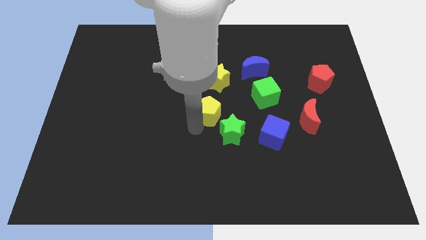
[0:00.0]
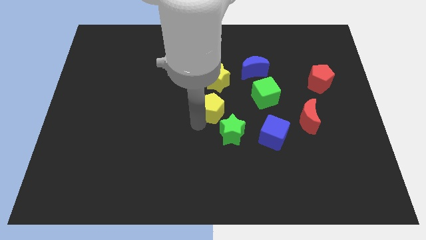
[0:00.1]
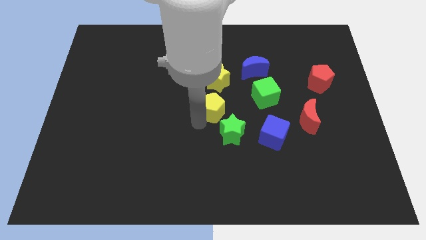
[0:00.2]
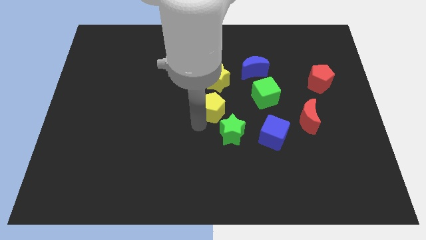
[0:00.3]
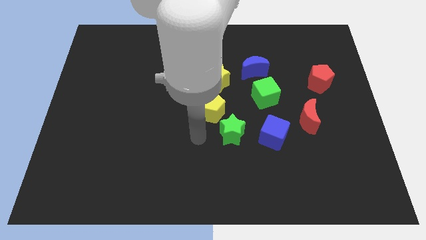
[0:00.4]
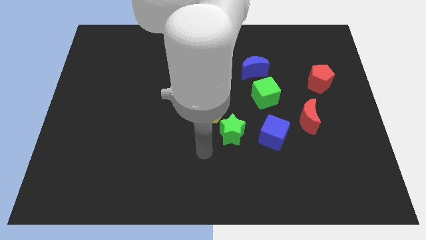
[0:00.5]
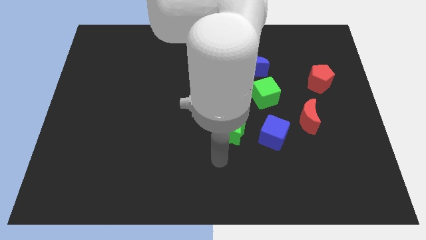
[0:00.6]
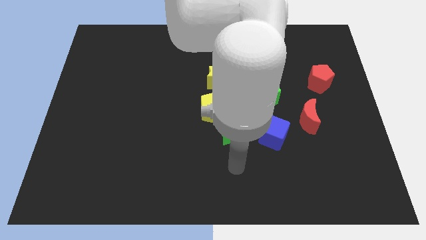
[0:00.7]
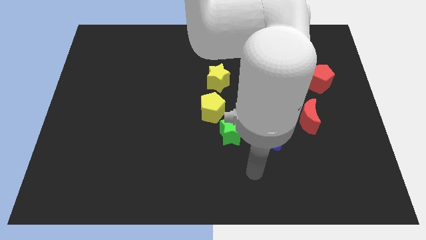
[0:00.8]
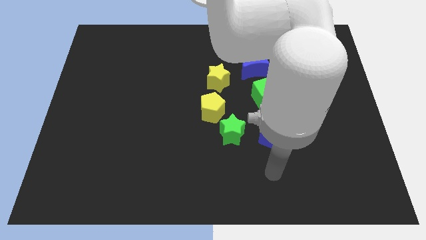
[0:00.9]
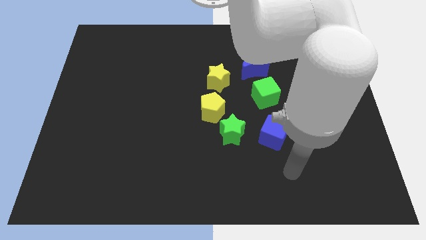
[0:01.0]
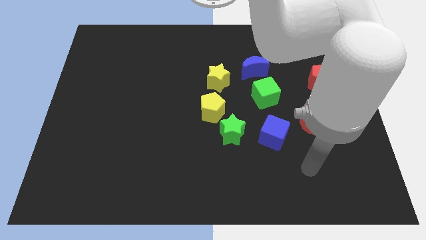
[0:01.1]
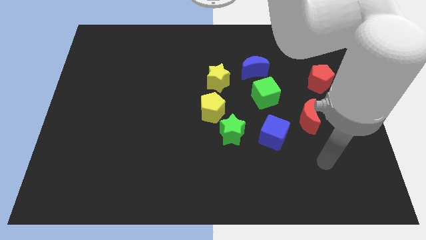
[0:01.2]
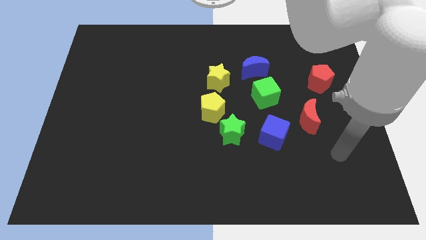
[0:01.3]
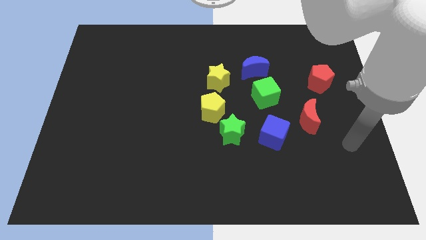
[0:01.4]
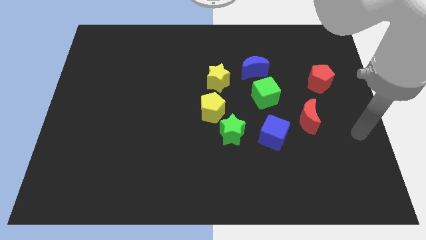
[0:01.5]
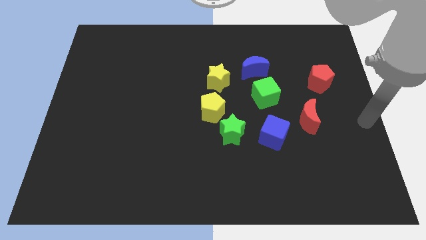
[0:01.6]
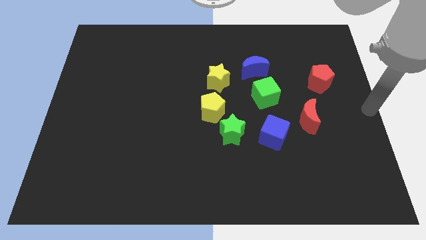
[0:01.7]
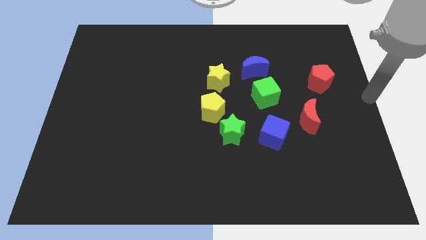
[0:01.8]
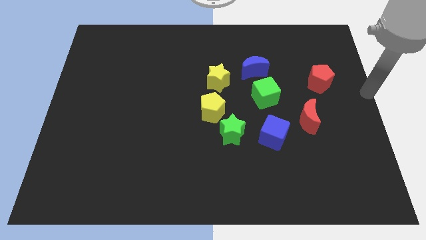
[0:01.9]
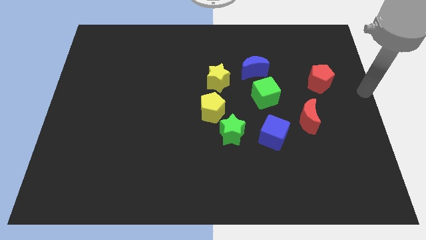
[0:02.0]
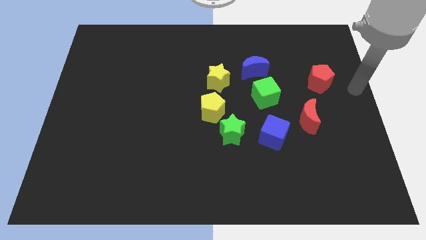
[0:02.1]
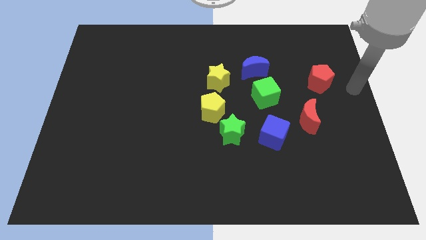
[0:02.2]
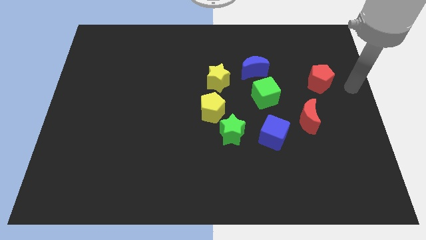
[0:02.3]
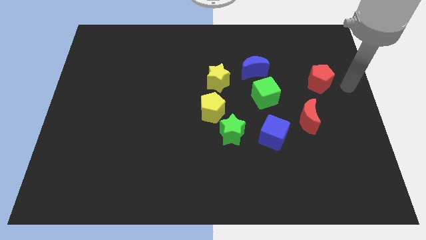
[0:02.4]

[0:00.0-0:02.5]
place your arm towards right side of red pentagon

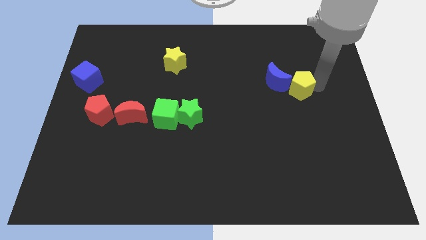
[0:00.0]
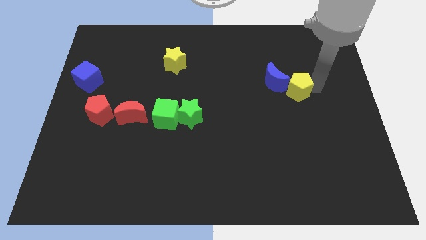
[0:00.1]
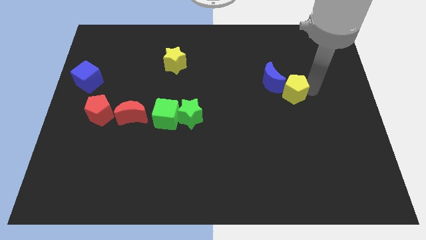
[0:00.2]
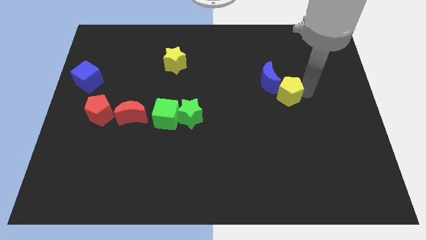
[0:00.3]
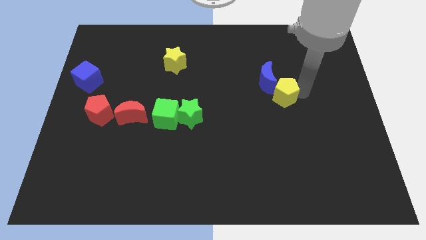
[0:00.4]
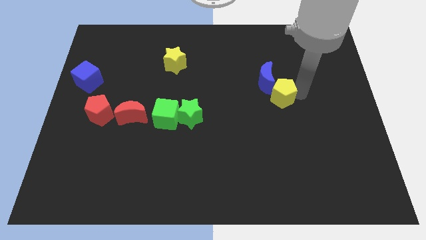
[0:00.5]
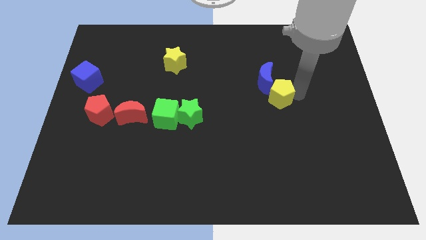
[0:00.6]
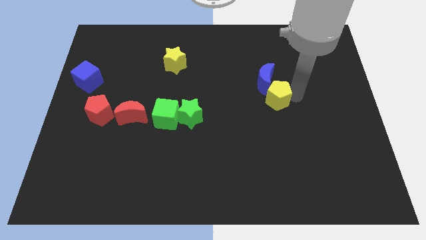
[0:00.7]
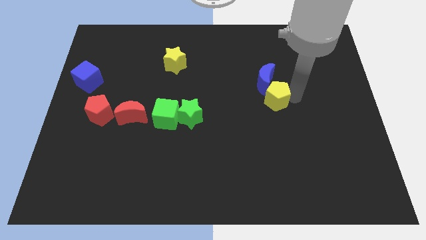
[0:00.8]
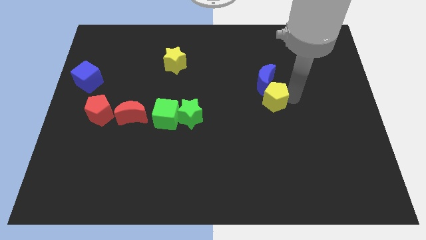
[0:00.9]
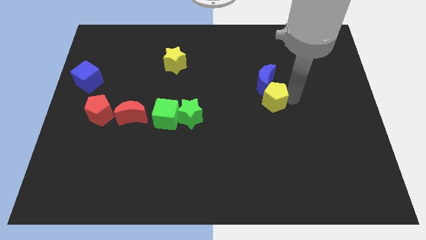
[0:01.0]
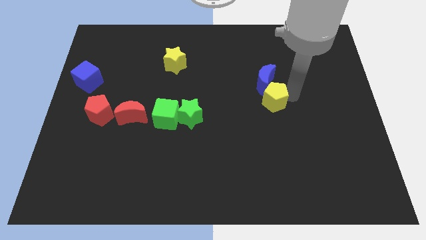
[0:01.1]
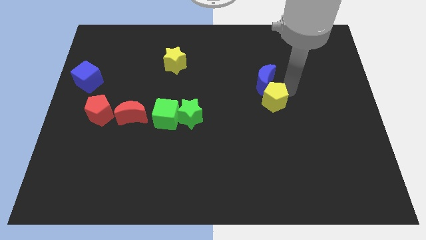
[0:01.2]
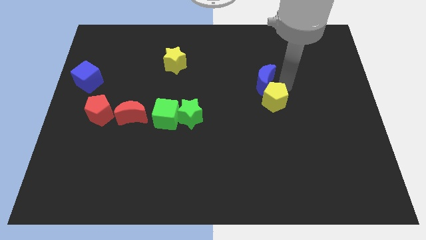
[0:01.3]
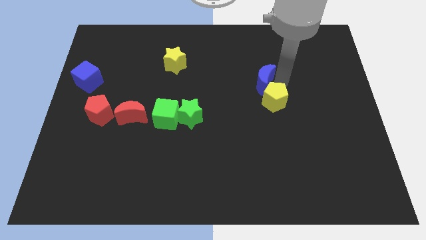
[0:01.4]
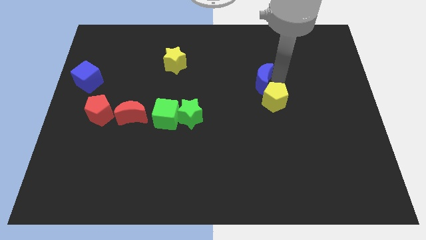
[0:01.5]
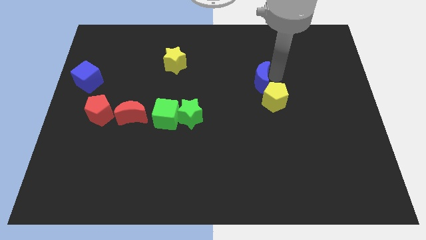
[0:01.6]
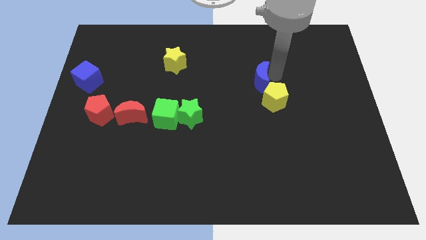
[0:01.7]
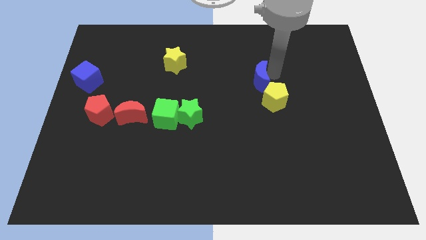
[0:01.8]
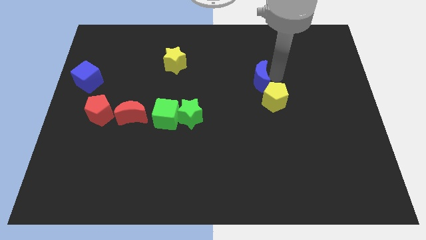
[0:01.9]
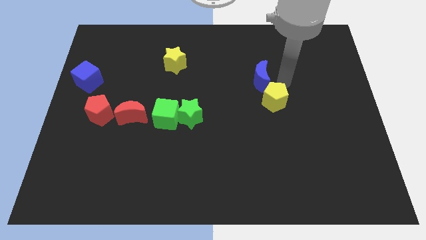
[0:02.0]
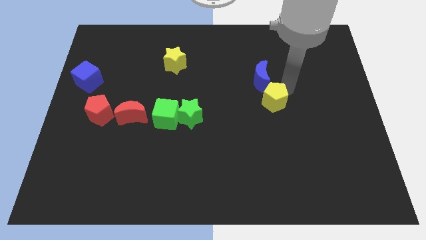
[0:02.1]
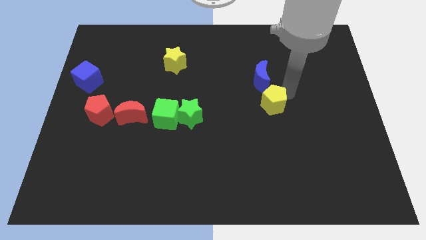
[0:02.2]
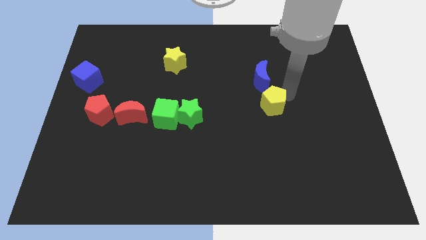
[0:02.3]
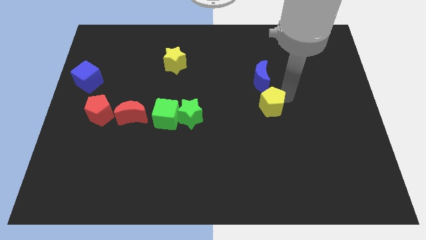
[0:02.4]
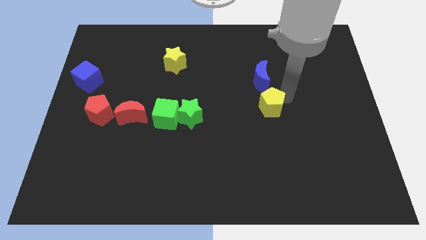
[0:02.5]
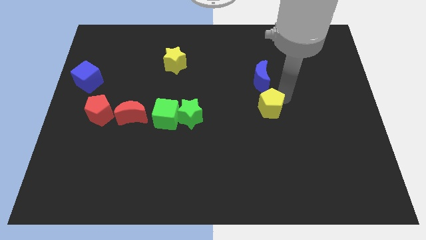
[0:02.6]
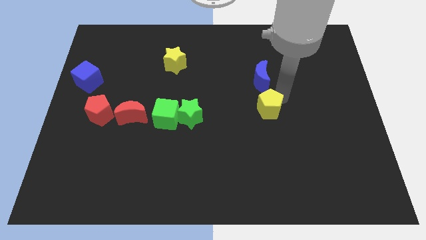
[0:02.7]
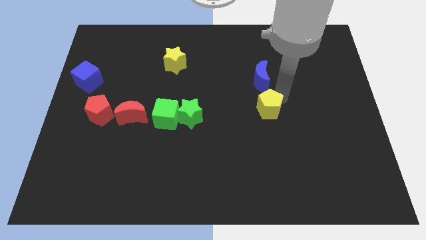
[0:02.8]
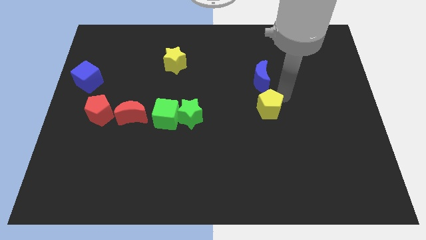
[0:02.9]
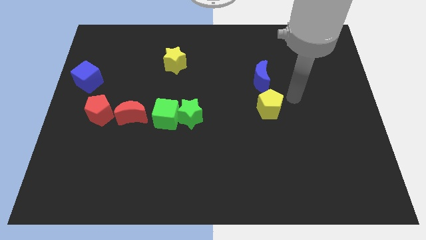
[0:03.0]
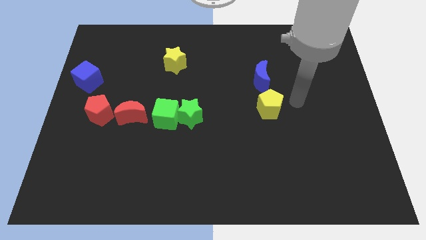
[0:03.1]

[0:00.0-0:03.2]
place the yellow pentagon below the blue crescent

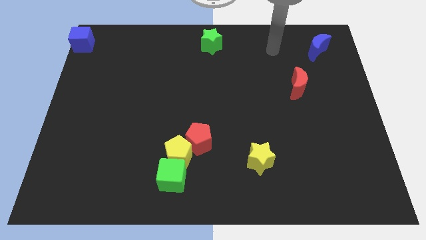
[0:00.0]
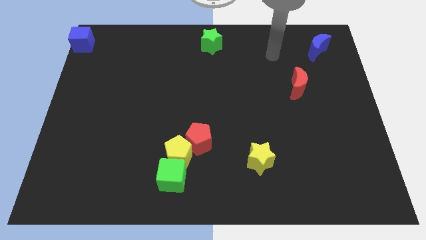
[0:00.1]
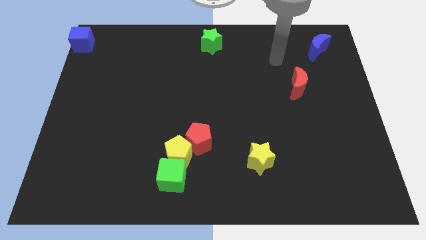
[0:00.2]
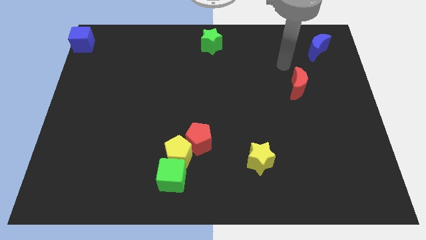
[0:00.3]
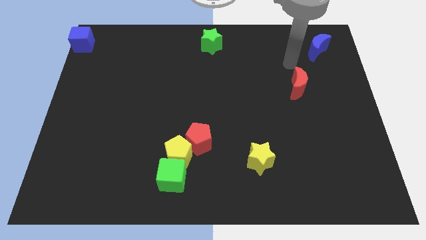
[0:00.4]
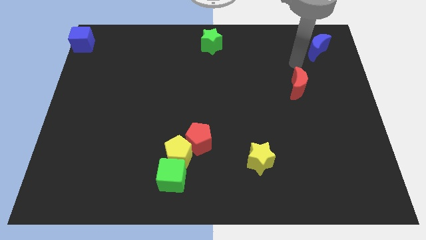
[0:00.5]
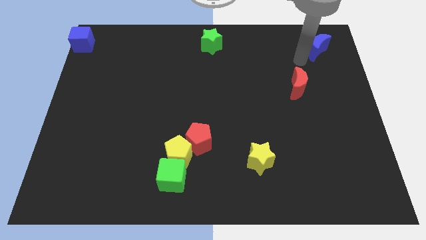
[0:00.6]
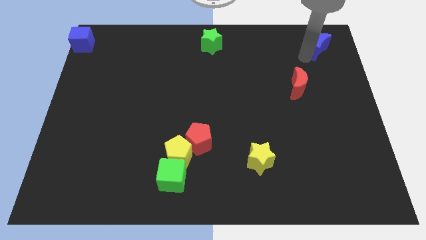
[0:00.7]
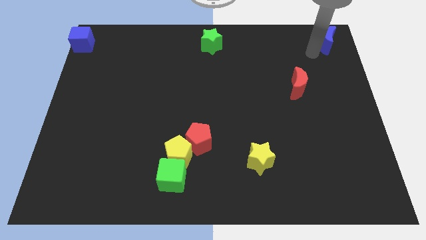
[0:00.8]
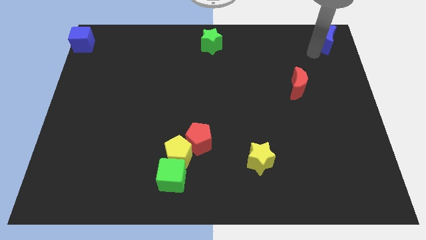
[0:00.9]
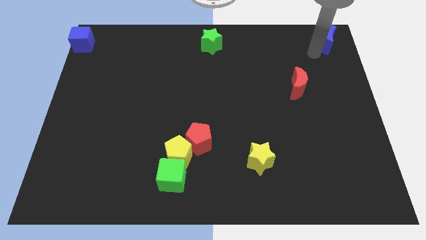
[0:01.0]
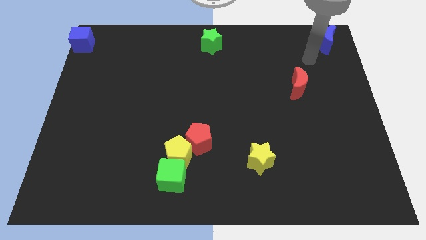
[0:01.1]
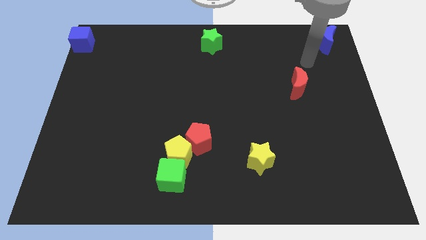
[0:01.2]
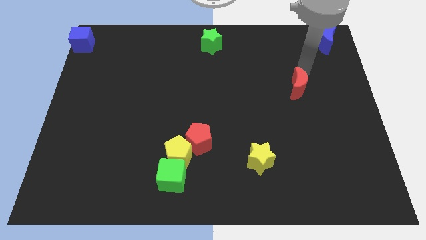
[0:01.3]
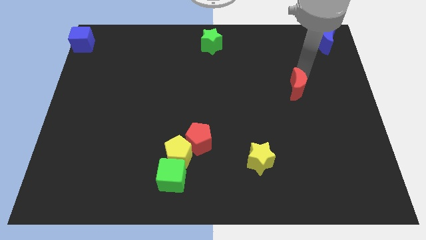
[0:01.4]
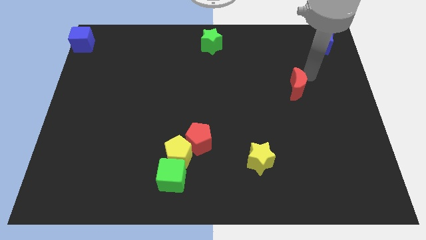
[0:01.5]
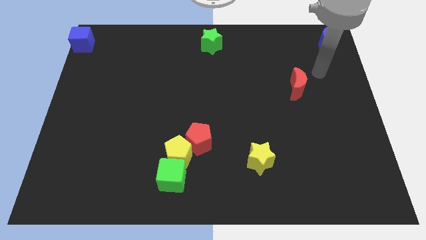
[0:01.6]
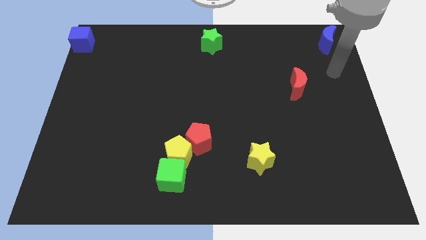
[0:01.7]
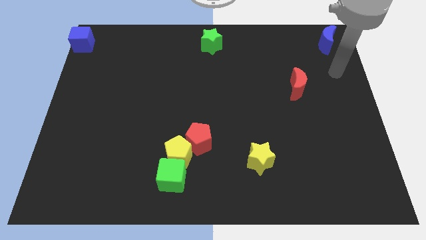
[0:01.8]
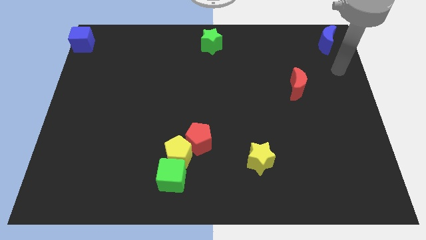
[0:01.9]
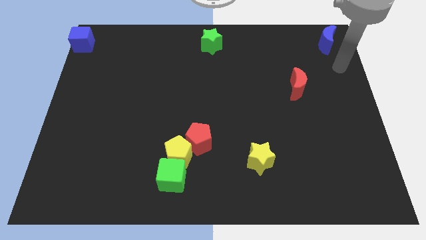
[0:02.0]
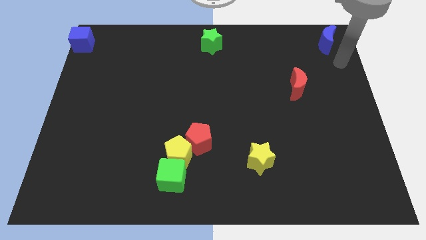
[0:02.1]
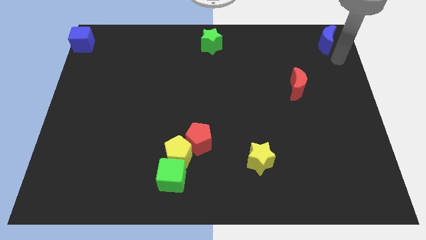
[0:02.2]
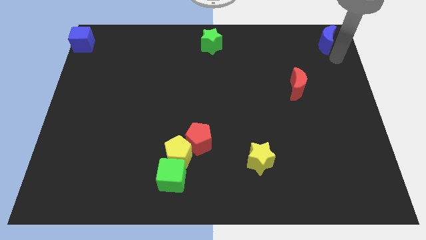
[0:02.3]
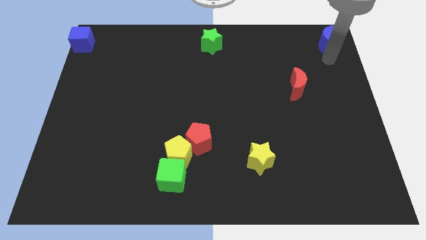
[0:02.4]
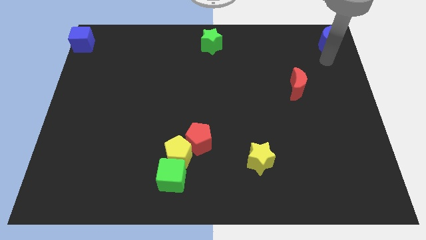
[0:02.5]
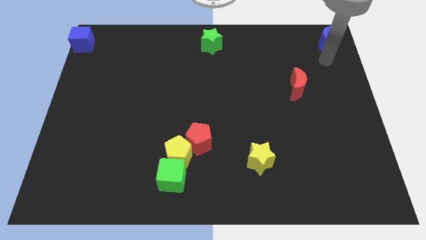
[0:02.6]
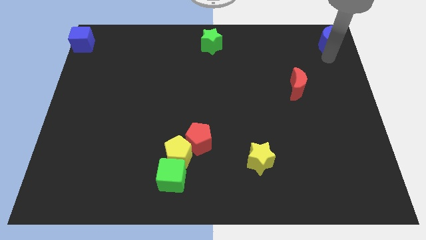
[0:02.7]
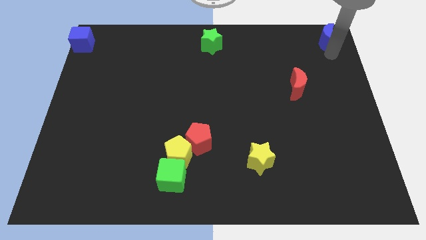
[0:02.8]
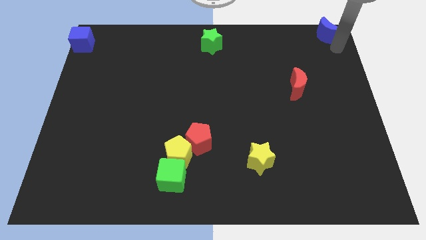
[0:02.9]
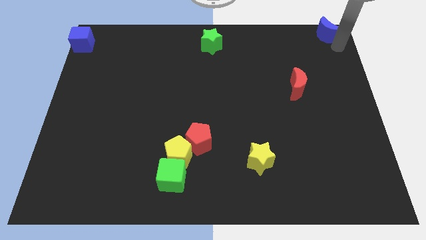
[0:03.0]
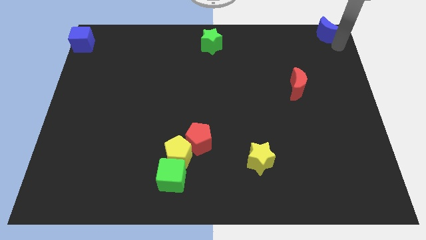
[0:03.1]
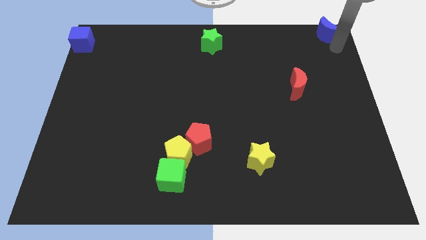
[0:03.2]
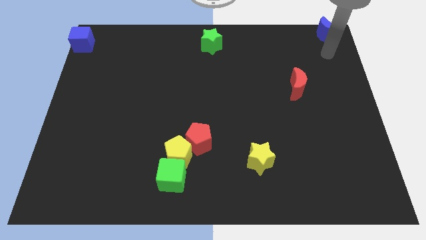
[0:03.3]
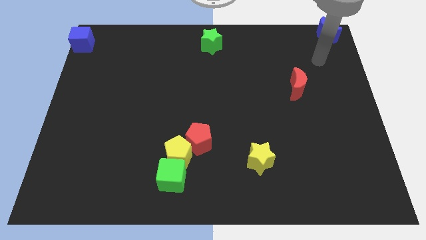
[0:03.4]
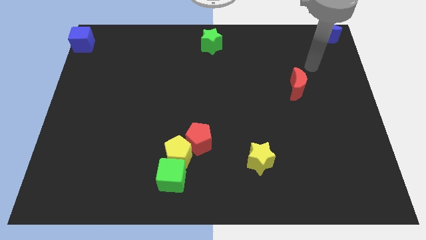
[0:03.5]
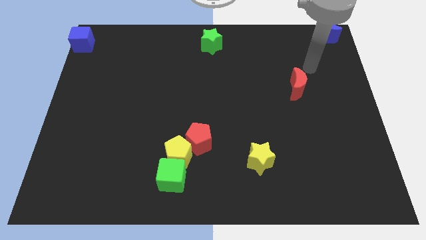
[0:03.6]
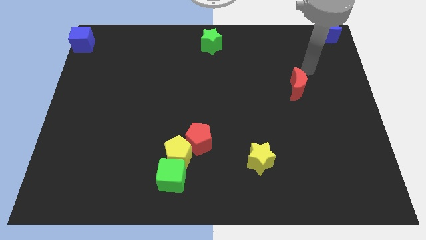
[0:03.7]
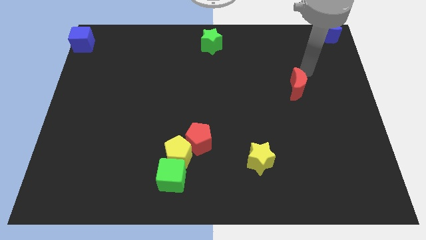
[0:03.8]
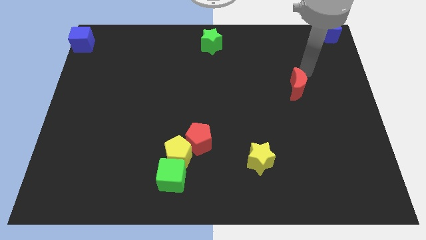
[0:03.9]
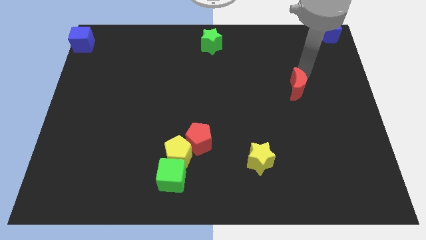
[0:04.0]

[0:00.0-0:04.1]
place the blue semicircle towardsthe top right corner of the board
